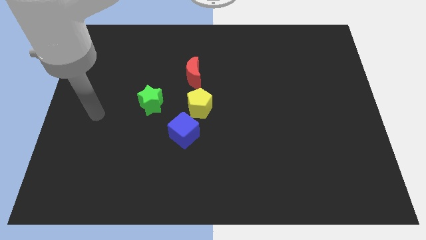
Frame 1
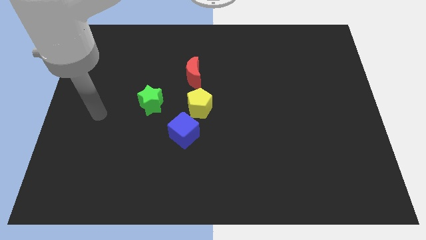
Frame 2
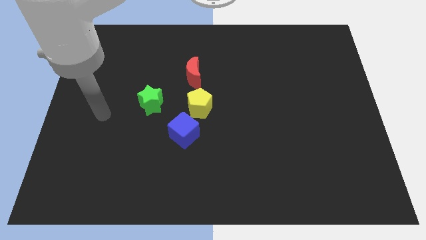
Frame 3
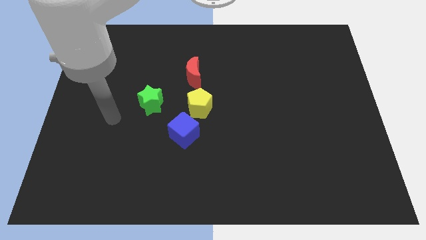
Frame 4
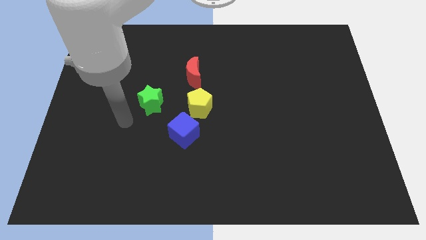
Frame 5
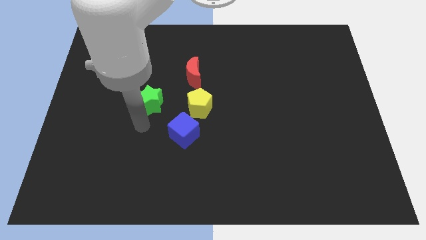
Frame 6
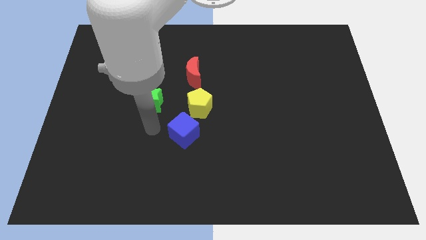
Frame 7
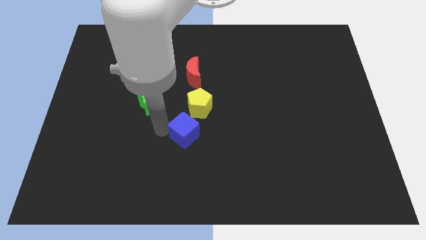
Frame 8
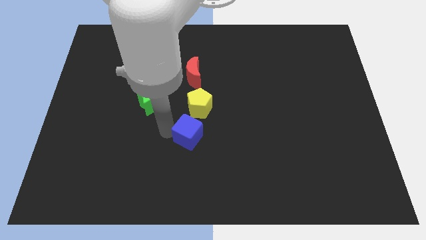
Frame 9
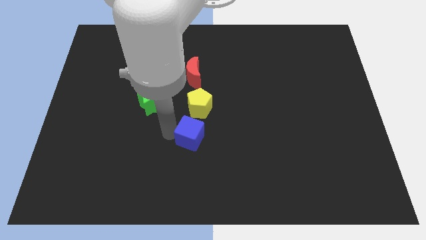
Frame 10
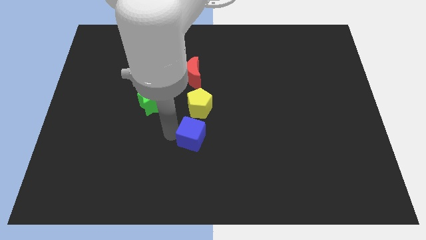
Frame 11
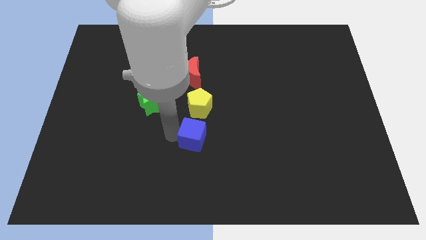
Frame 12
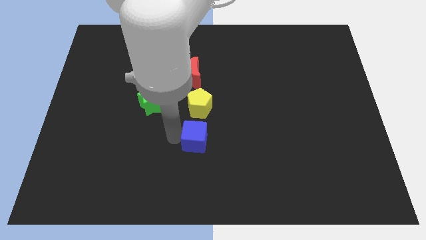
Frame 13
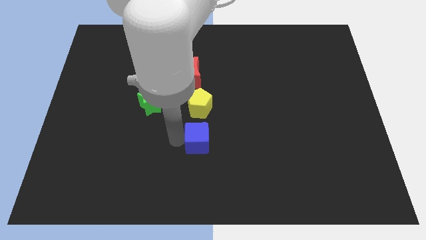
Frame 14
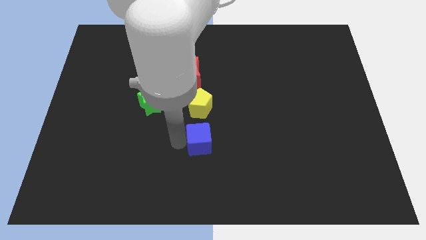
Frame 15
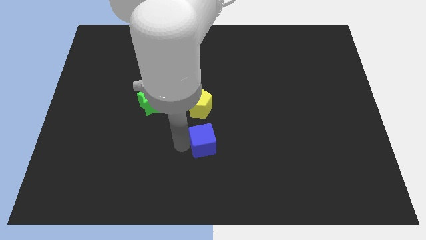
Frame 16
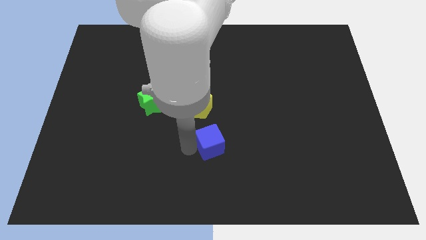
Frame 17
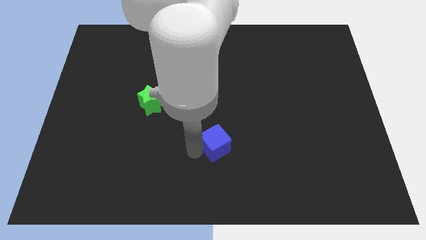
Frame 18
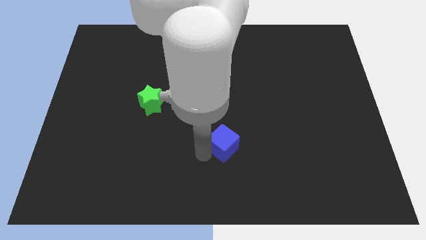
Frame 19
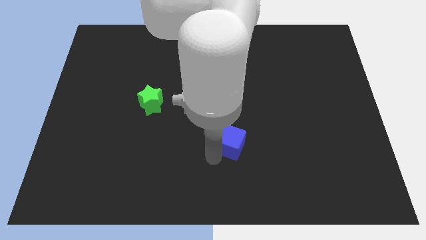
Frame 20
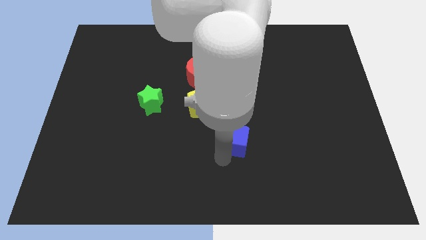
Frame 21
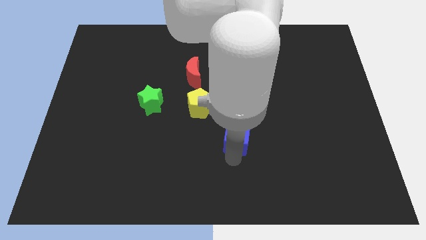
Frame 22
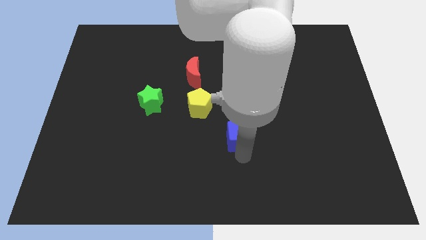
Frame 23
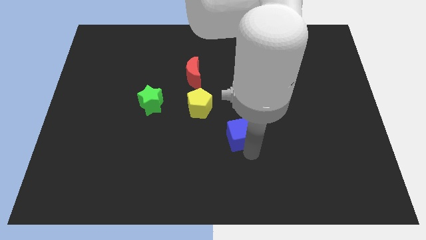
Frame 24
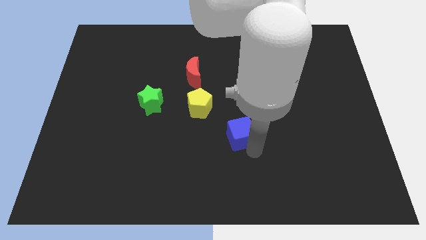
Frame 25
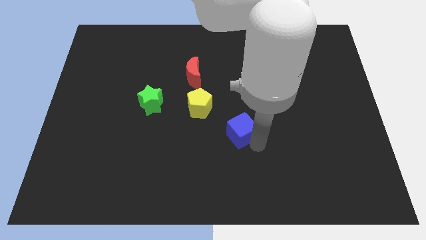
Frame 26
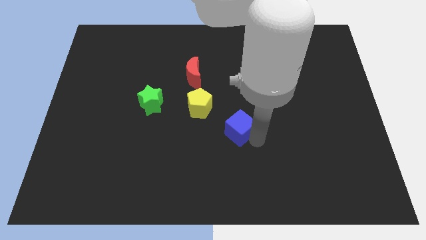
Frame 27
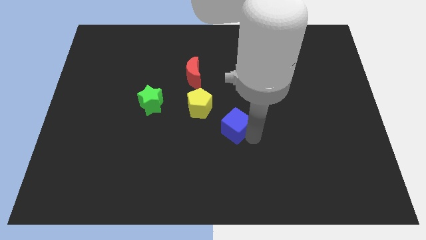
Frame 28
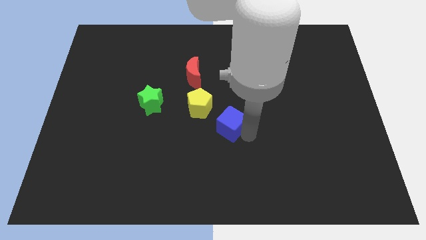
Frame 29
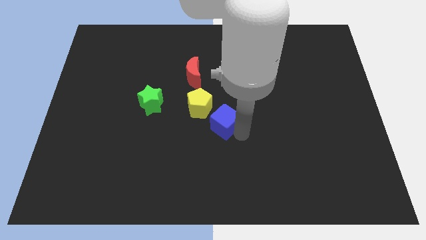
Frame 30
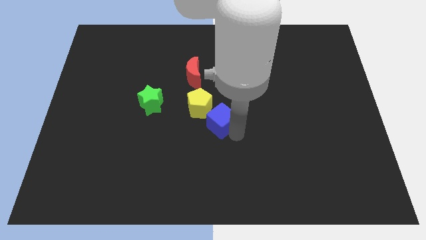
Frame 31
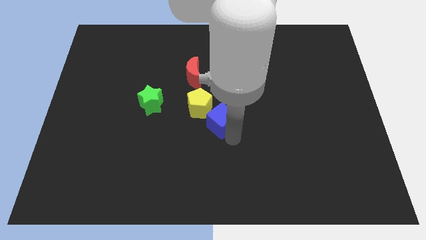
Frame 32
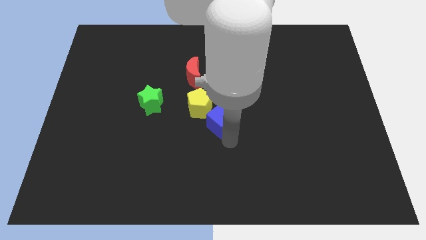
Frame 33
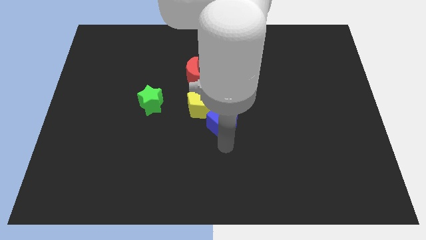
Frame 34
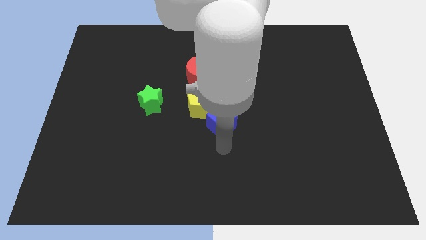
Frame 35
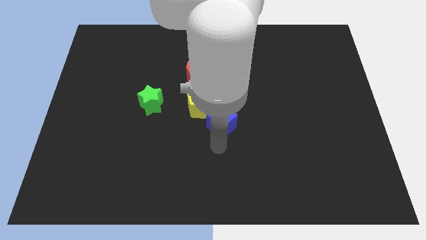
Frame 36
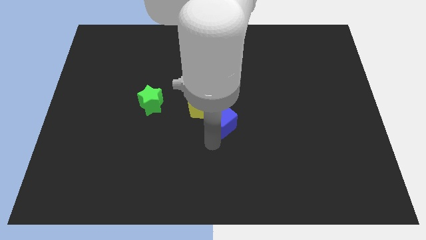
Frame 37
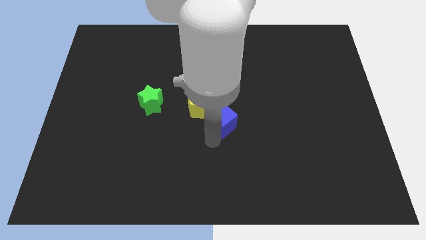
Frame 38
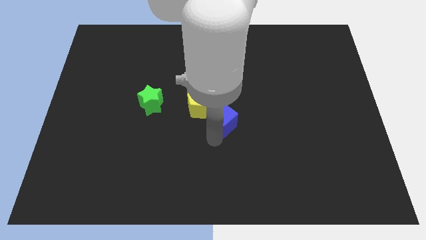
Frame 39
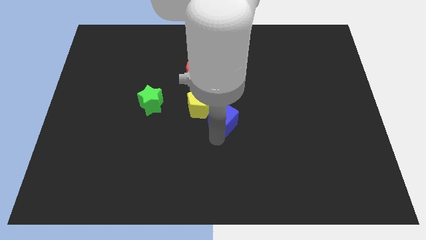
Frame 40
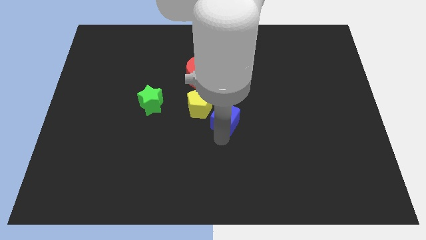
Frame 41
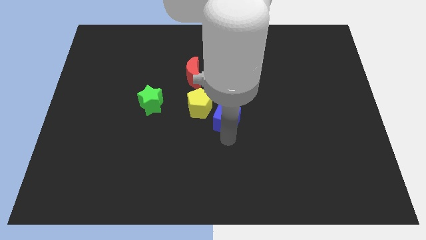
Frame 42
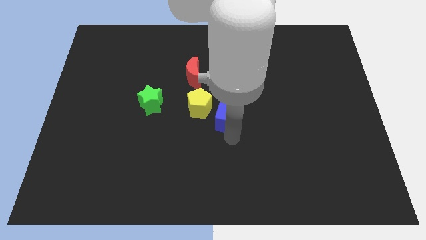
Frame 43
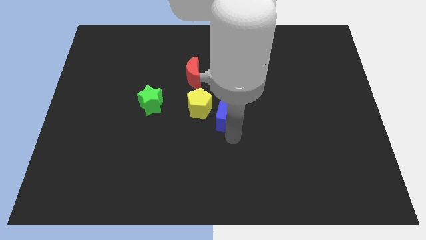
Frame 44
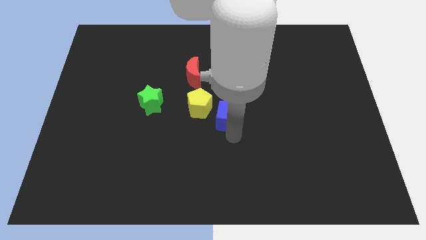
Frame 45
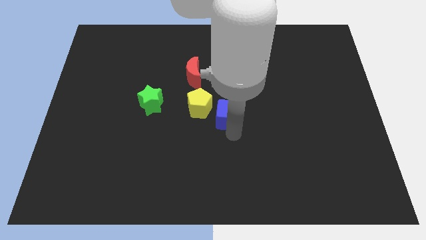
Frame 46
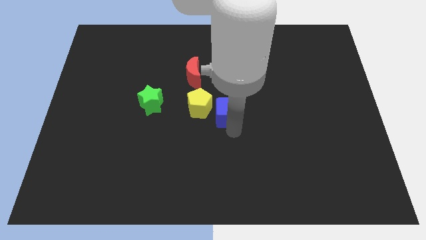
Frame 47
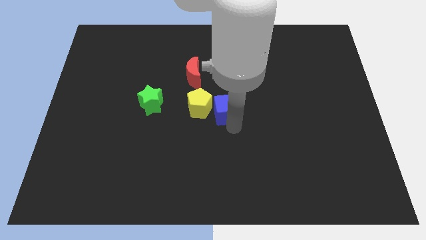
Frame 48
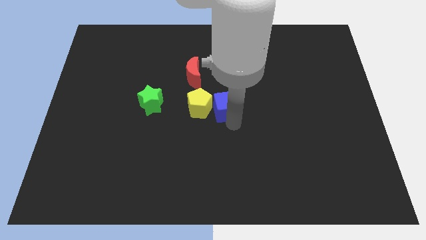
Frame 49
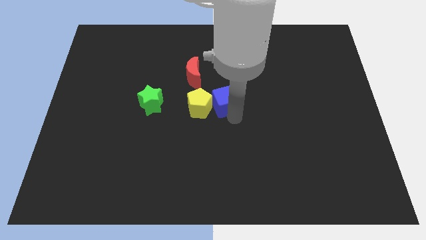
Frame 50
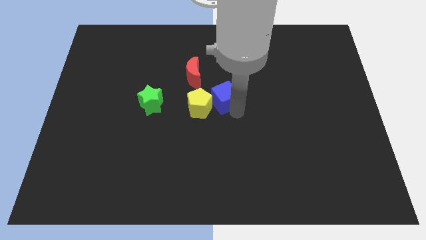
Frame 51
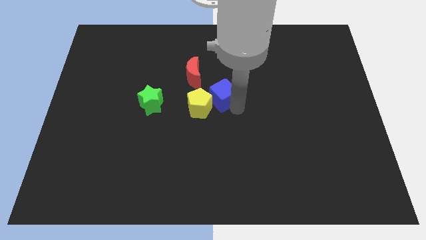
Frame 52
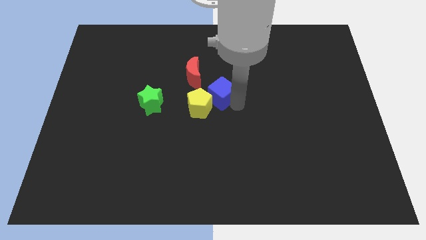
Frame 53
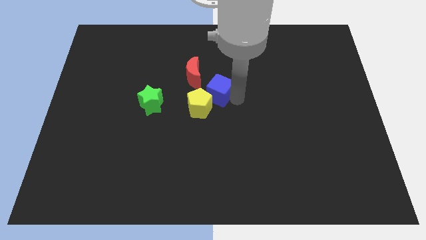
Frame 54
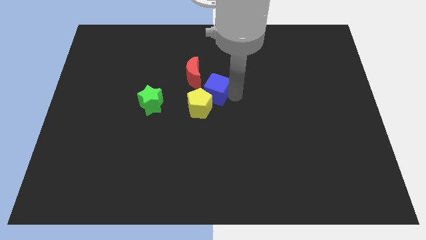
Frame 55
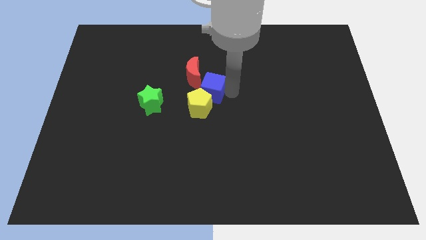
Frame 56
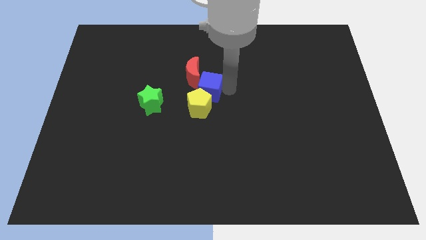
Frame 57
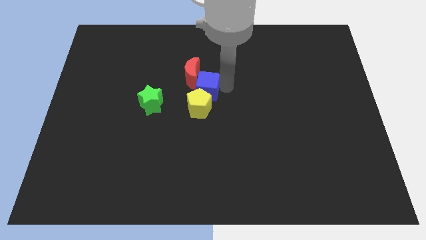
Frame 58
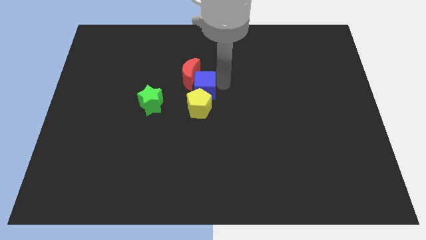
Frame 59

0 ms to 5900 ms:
put the cube to the moon

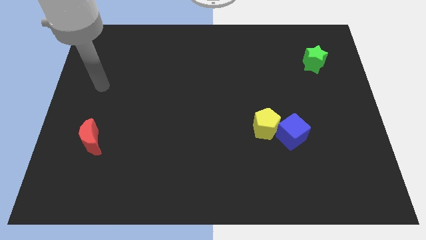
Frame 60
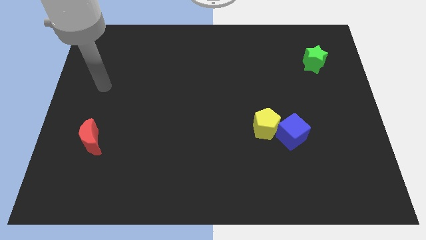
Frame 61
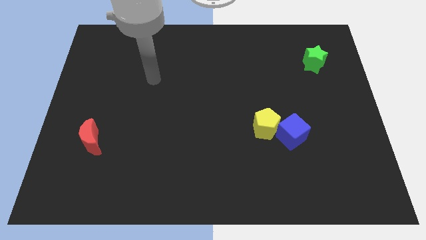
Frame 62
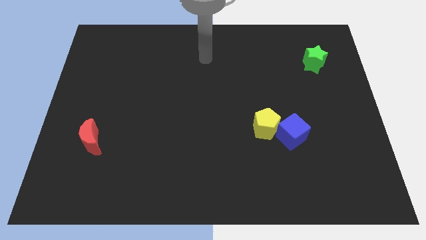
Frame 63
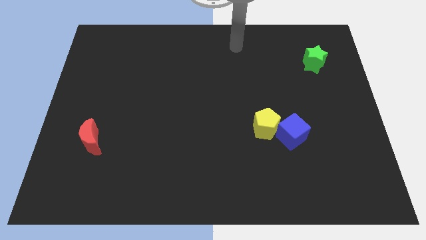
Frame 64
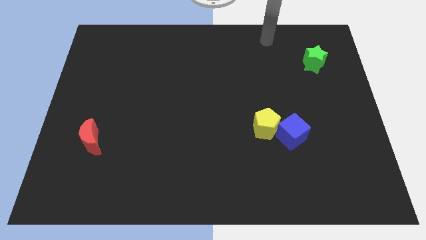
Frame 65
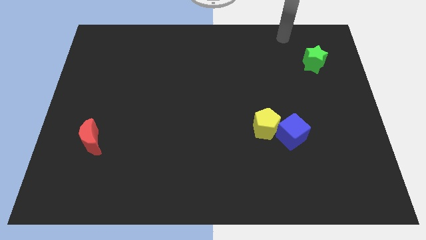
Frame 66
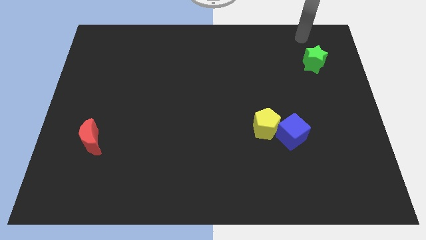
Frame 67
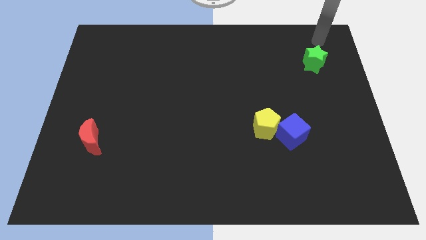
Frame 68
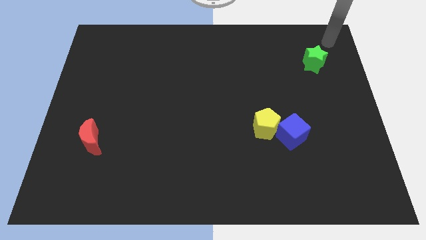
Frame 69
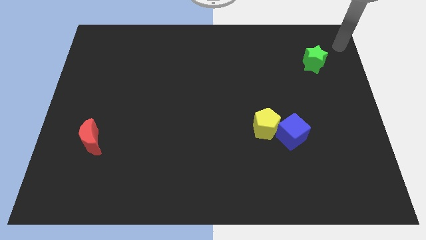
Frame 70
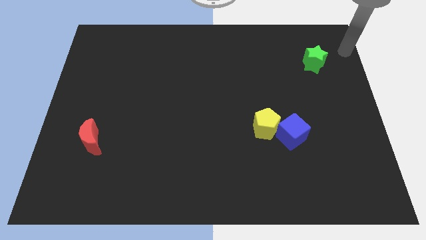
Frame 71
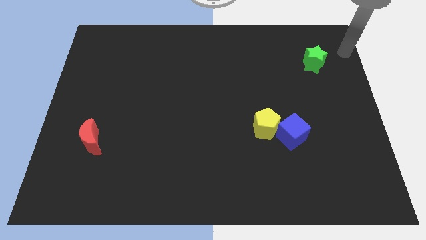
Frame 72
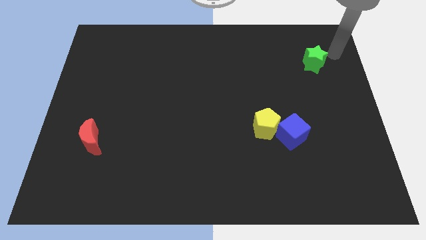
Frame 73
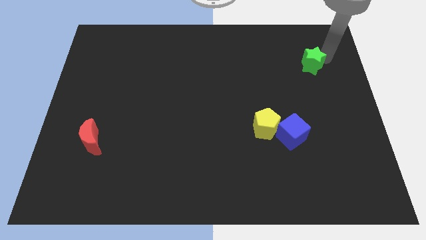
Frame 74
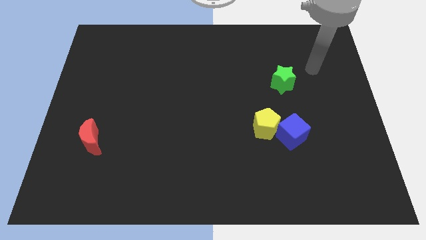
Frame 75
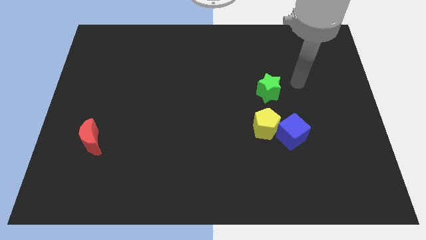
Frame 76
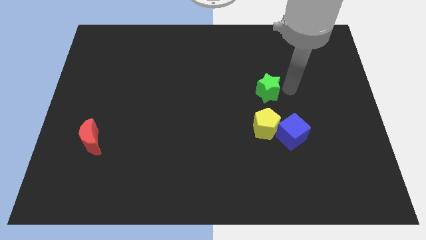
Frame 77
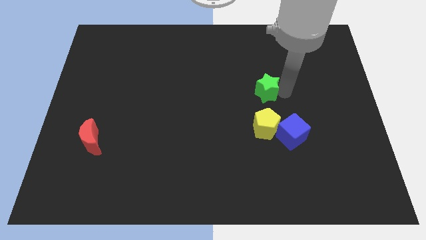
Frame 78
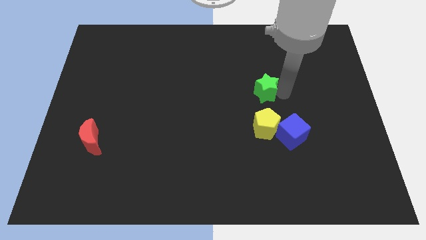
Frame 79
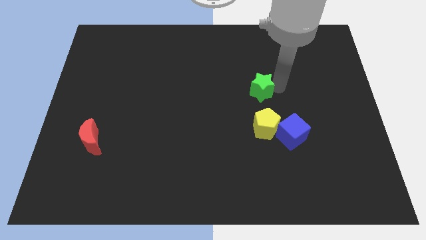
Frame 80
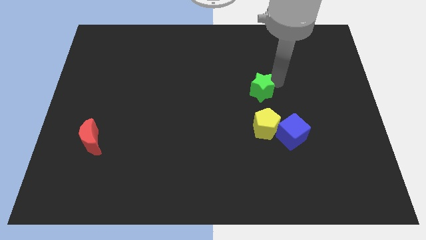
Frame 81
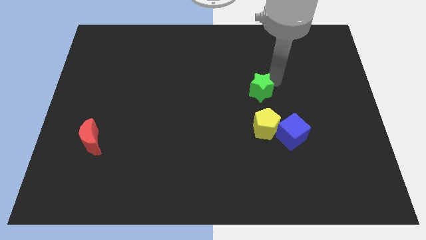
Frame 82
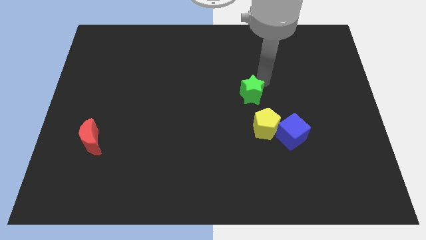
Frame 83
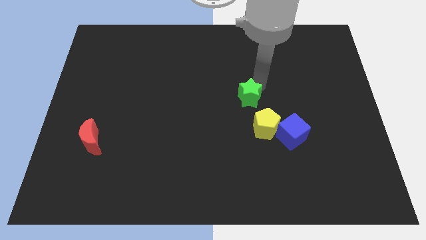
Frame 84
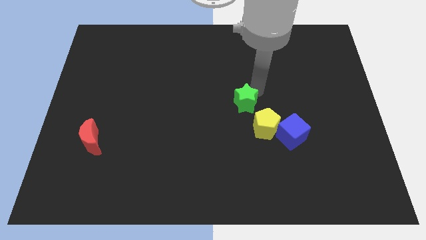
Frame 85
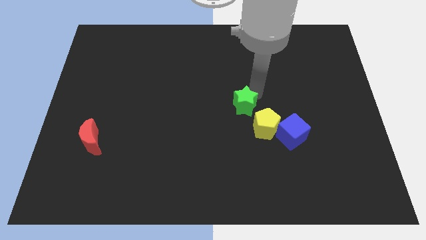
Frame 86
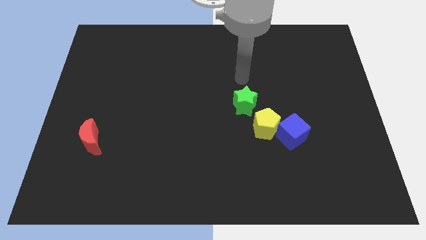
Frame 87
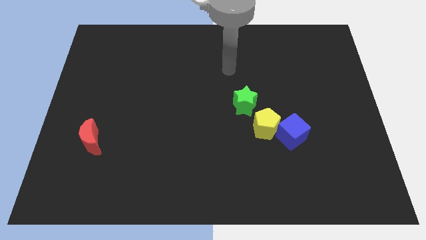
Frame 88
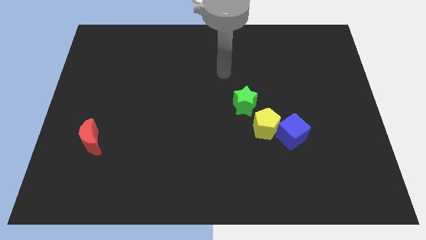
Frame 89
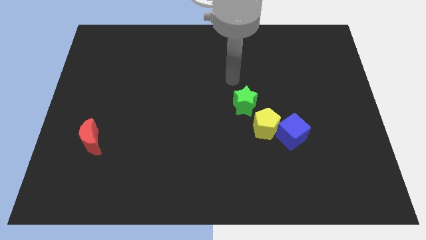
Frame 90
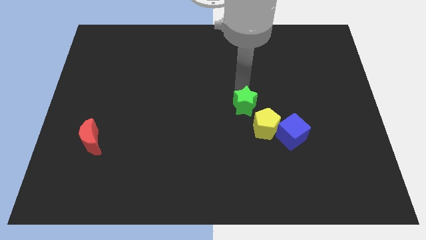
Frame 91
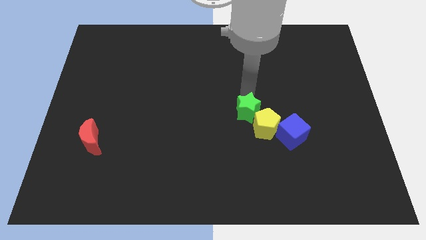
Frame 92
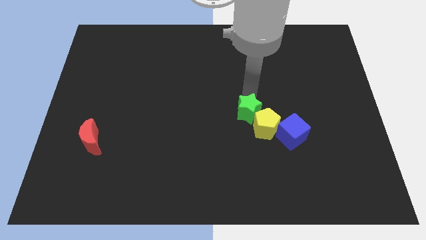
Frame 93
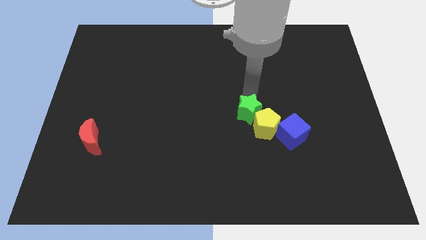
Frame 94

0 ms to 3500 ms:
push the green star close to the yellow pentagon
